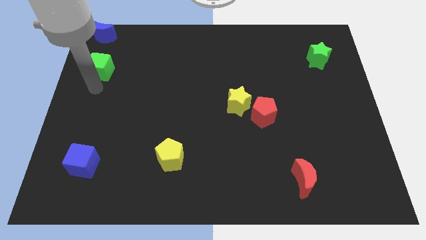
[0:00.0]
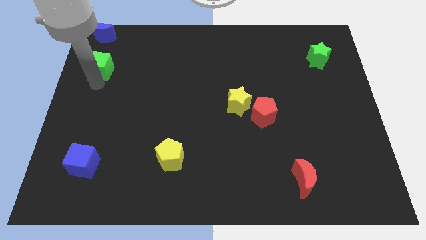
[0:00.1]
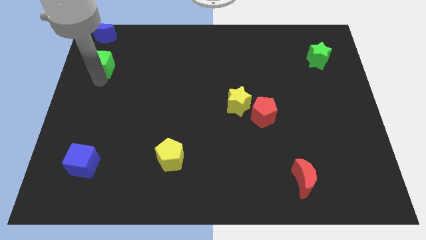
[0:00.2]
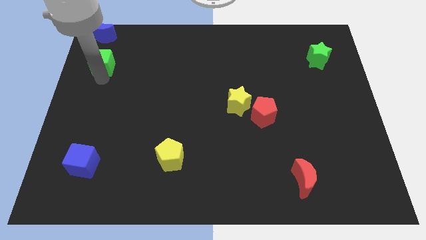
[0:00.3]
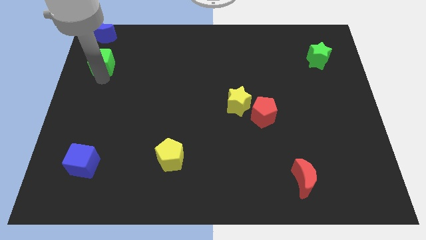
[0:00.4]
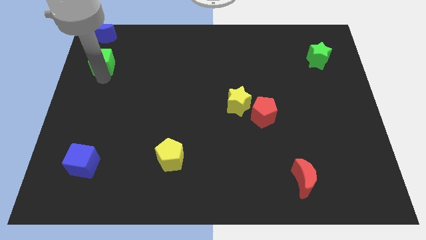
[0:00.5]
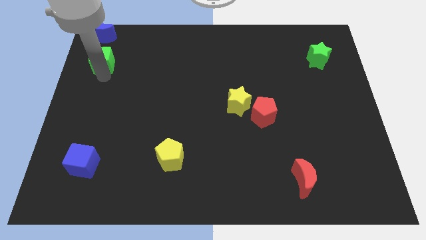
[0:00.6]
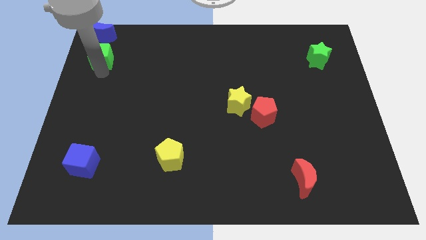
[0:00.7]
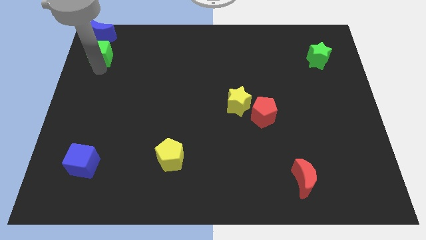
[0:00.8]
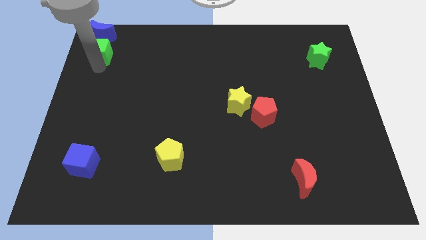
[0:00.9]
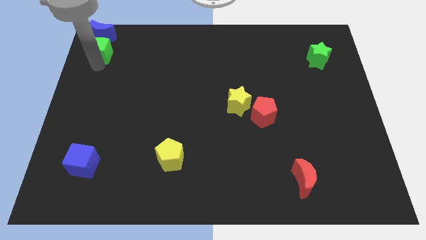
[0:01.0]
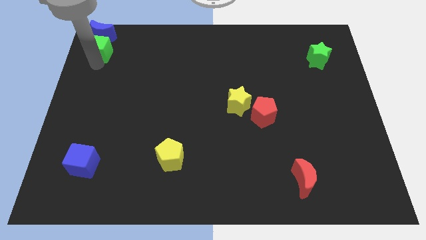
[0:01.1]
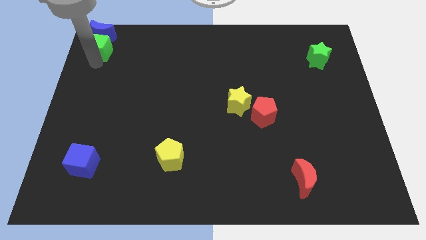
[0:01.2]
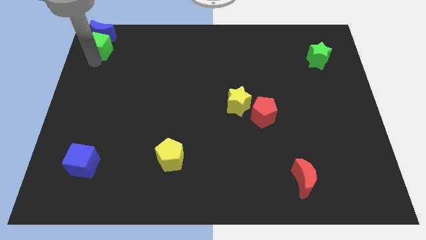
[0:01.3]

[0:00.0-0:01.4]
push green cube towards blue moon at the top

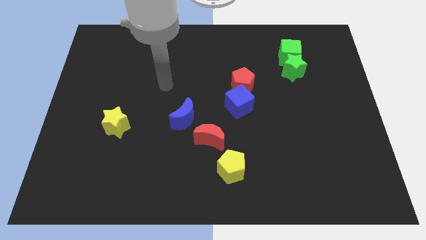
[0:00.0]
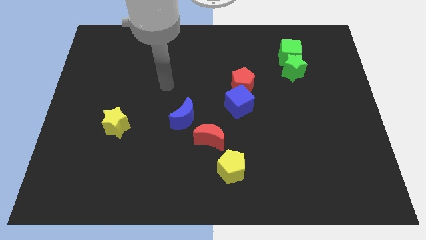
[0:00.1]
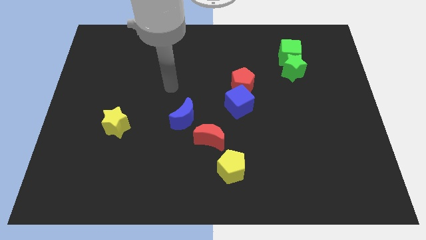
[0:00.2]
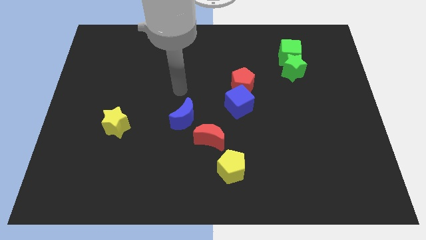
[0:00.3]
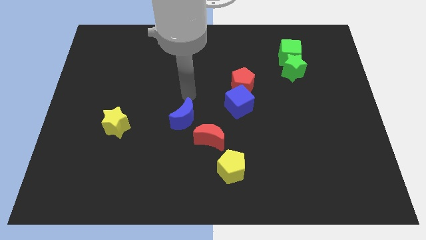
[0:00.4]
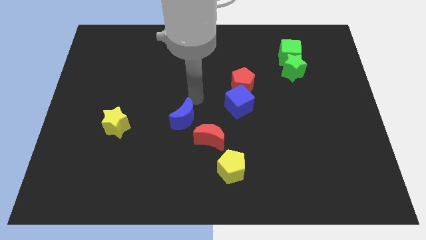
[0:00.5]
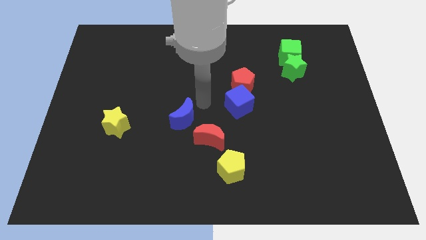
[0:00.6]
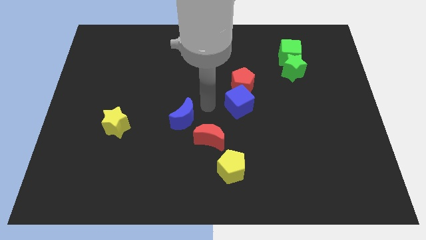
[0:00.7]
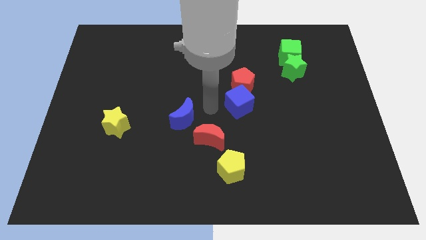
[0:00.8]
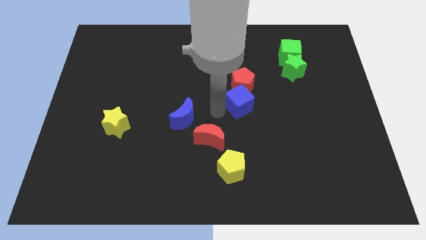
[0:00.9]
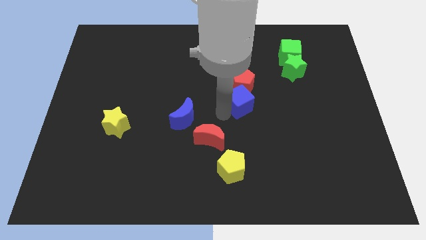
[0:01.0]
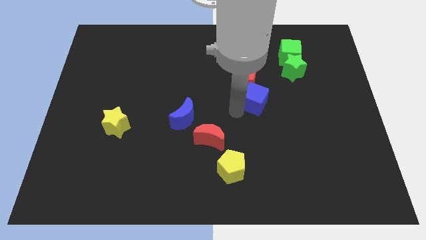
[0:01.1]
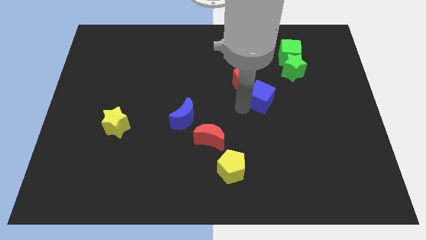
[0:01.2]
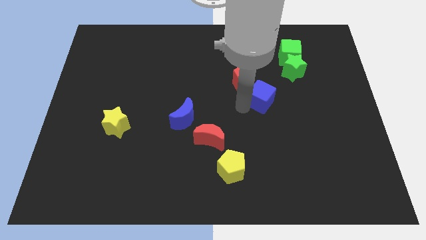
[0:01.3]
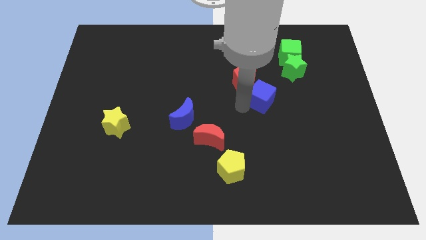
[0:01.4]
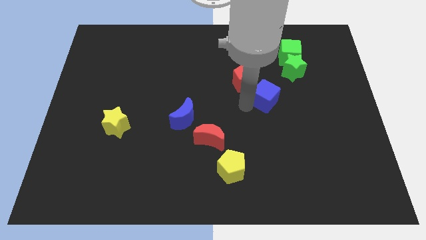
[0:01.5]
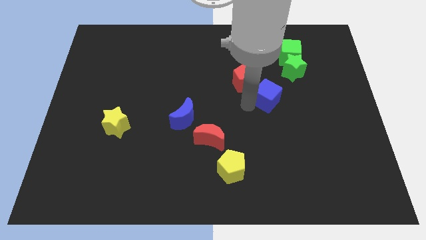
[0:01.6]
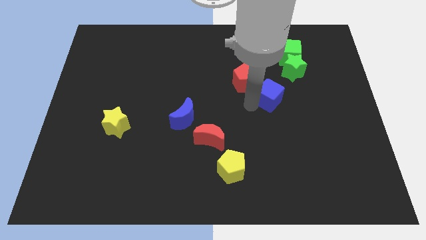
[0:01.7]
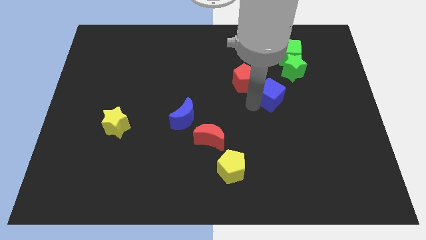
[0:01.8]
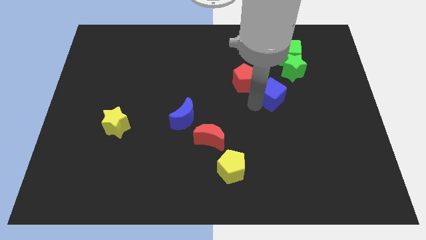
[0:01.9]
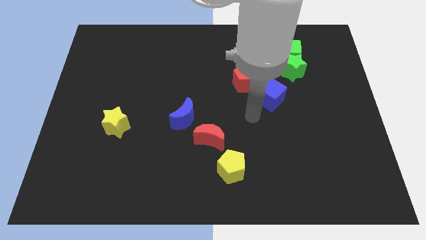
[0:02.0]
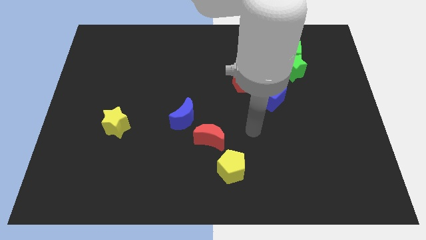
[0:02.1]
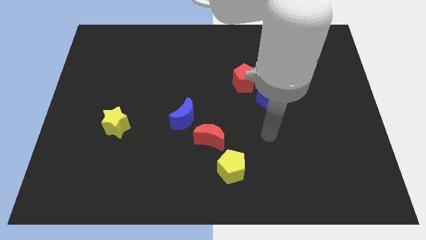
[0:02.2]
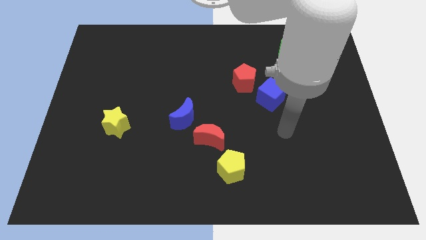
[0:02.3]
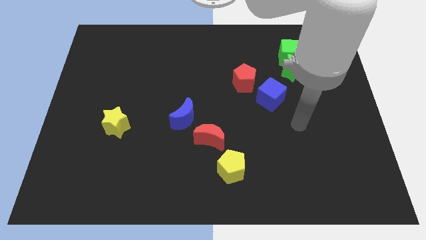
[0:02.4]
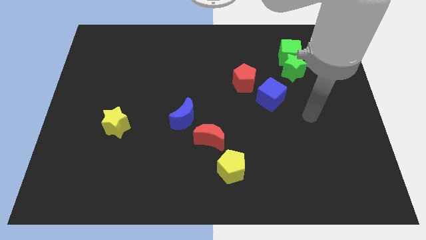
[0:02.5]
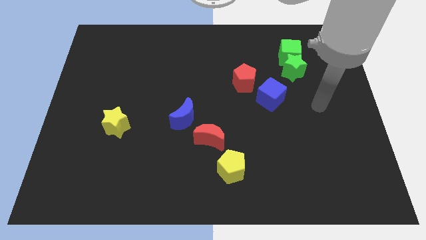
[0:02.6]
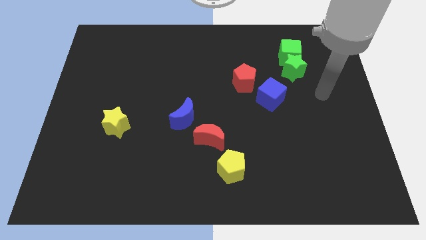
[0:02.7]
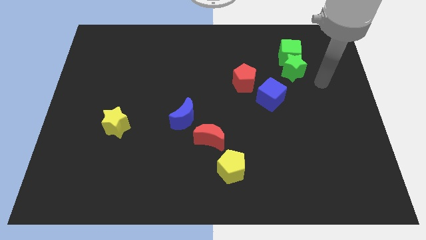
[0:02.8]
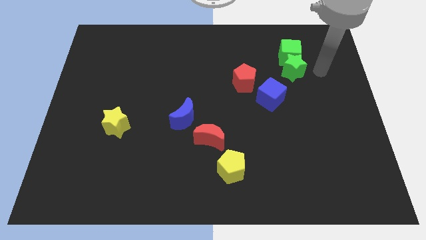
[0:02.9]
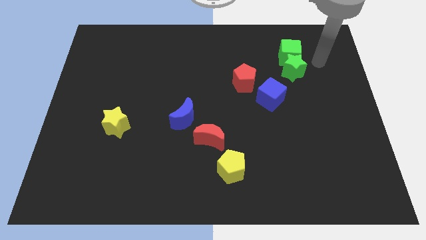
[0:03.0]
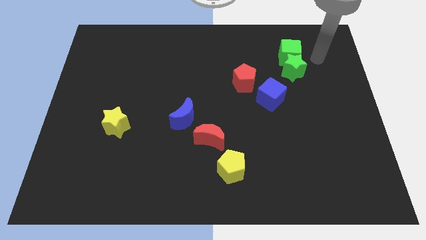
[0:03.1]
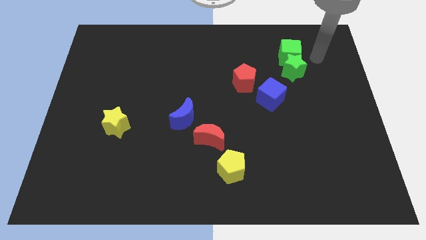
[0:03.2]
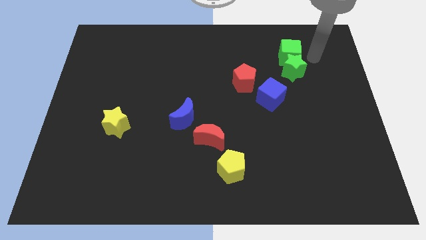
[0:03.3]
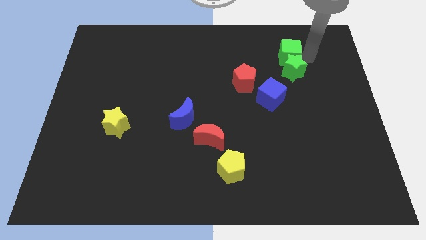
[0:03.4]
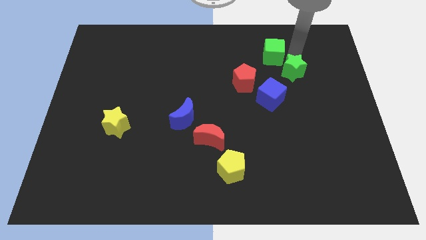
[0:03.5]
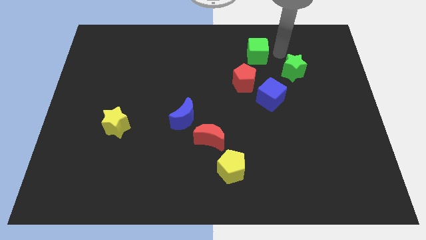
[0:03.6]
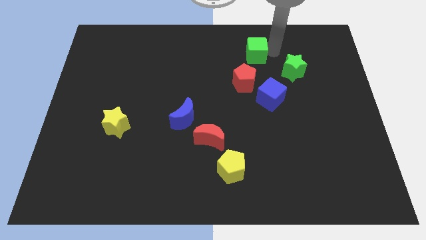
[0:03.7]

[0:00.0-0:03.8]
move your arm and push the blue cube and green cube

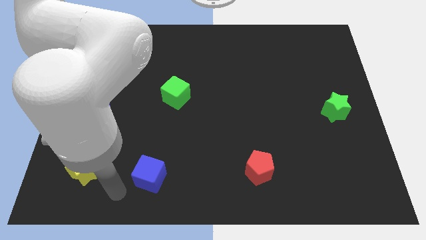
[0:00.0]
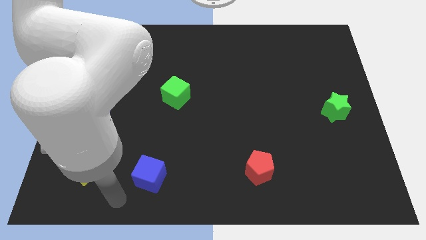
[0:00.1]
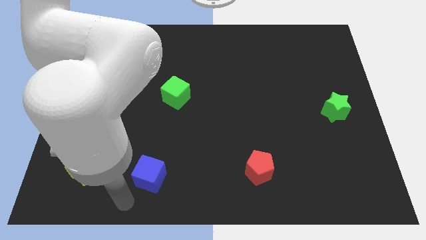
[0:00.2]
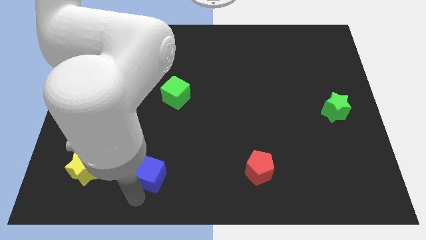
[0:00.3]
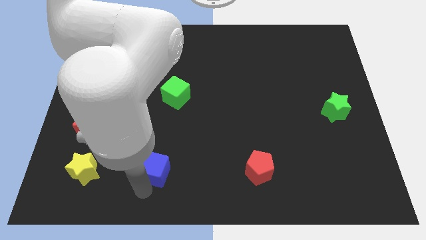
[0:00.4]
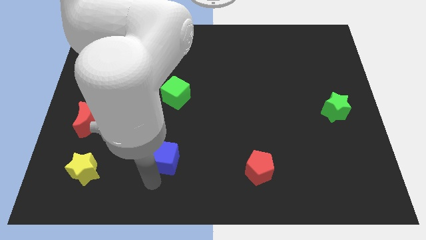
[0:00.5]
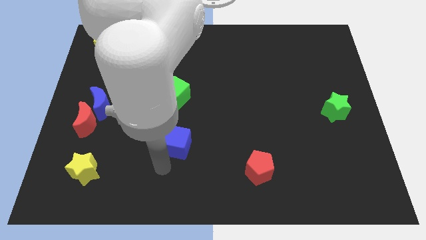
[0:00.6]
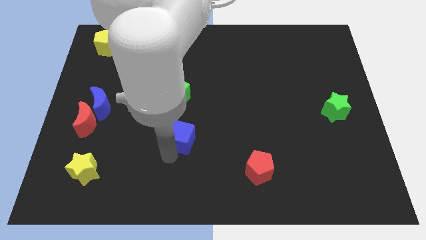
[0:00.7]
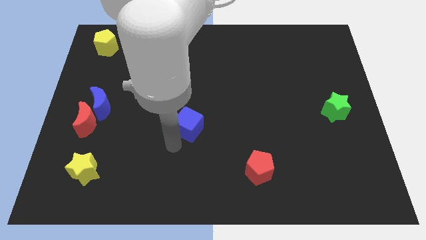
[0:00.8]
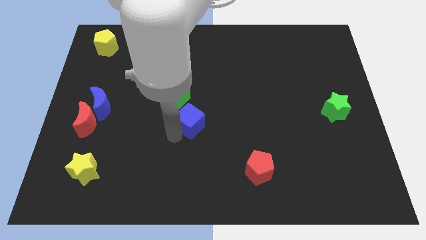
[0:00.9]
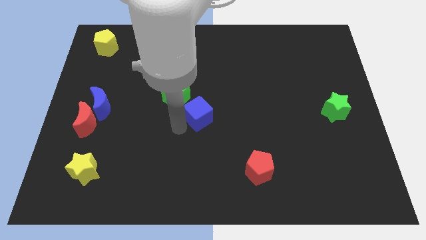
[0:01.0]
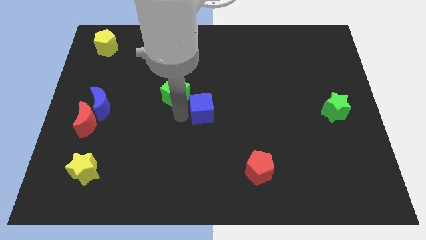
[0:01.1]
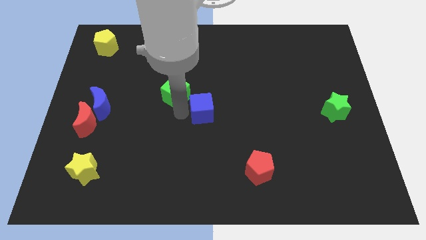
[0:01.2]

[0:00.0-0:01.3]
slide the blue cube close to the green cube

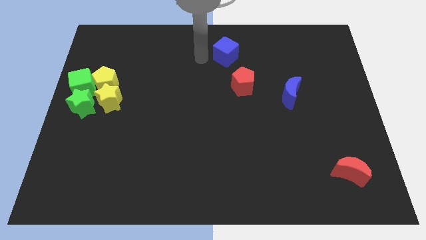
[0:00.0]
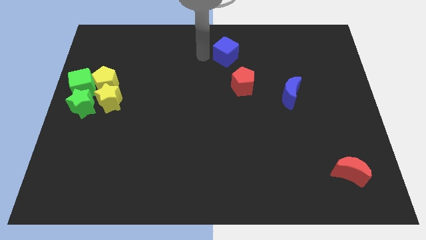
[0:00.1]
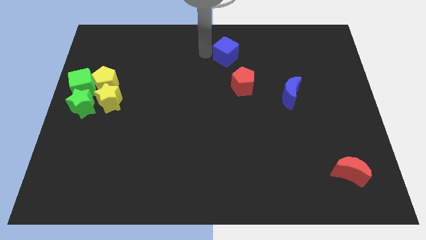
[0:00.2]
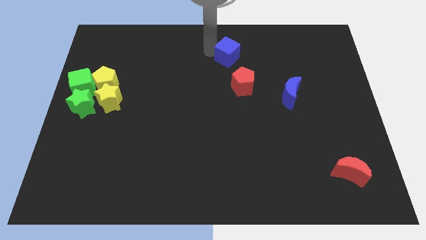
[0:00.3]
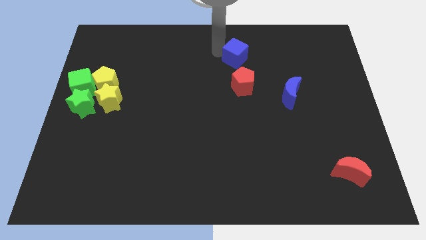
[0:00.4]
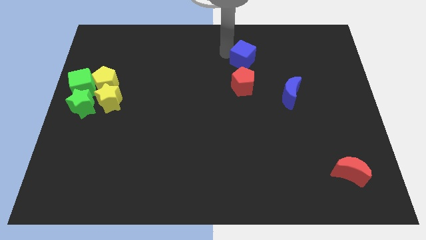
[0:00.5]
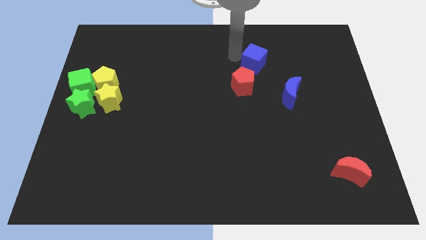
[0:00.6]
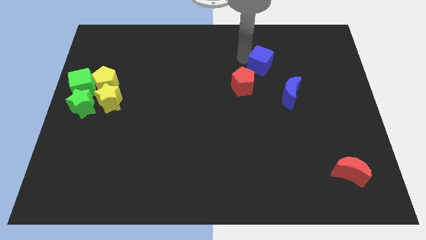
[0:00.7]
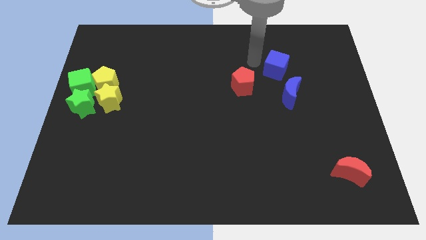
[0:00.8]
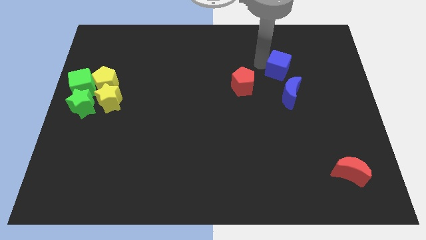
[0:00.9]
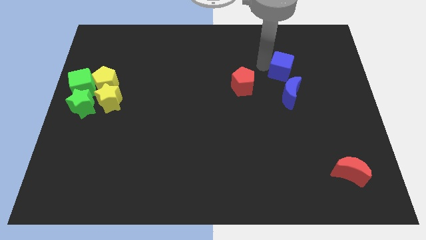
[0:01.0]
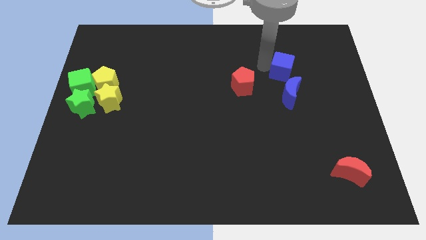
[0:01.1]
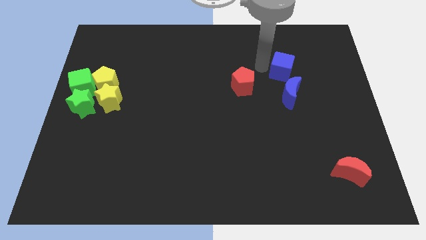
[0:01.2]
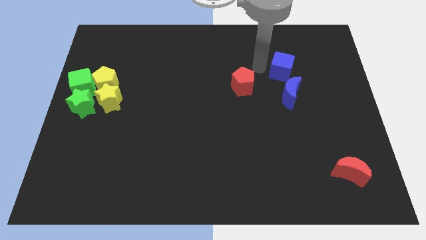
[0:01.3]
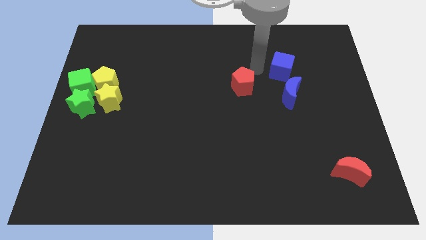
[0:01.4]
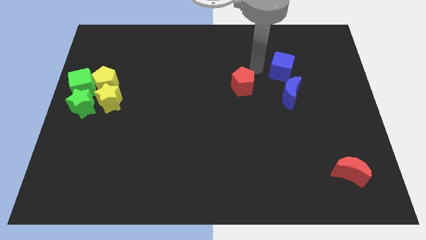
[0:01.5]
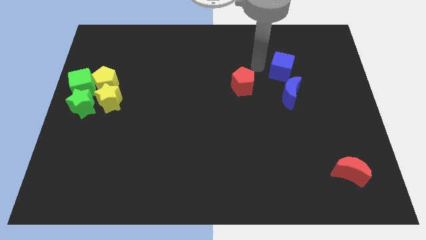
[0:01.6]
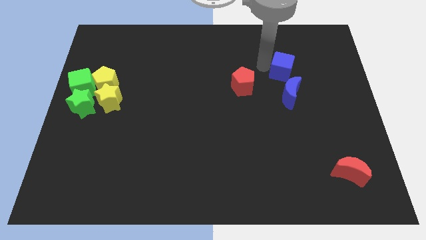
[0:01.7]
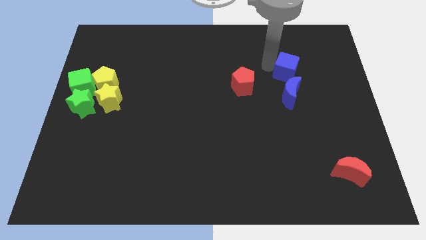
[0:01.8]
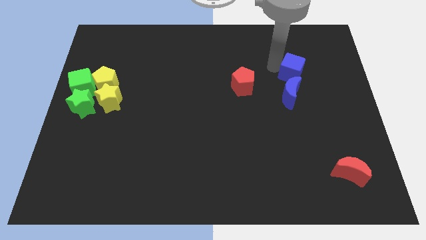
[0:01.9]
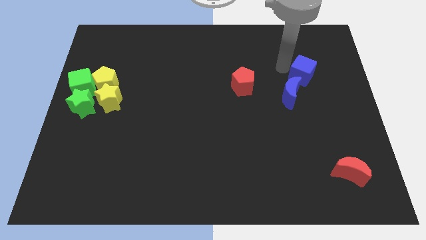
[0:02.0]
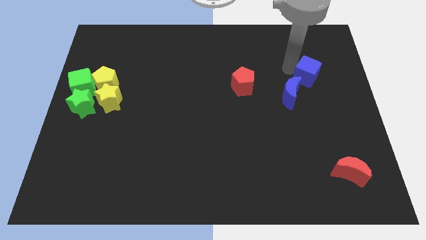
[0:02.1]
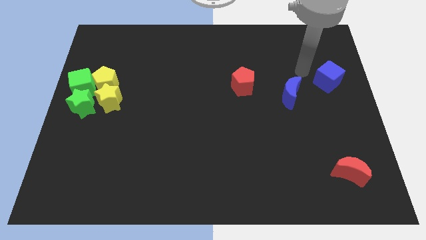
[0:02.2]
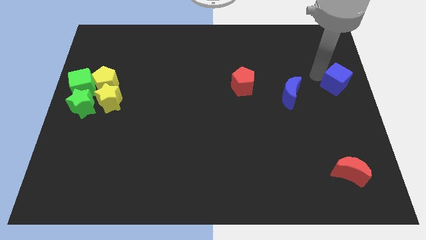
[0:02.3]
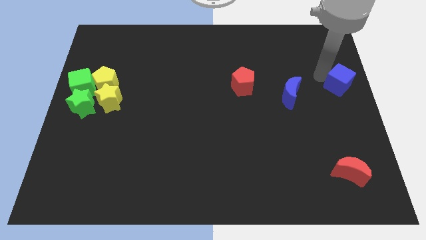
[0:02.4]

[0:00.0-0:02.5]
push the blue cube to the right of the blue crescent
